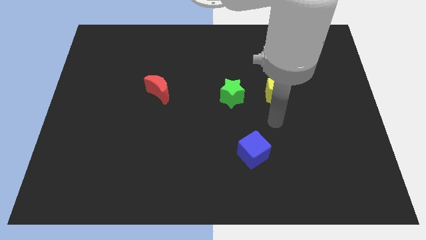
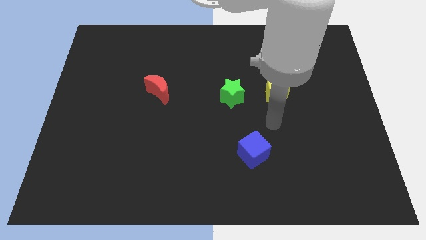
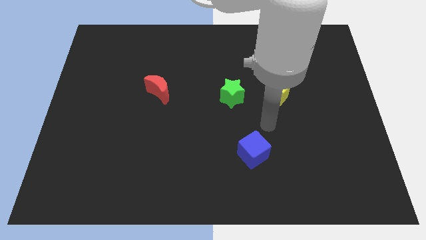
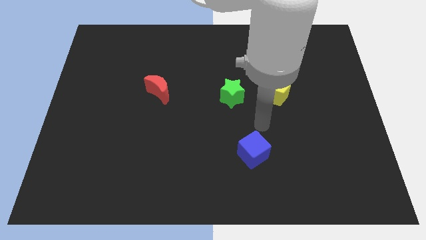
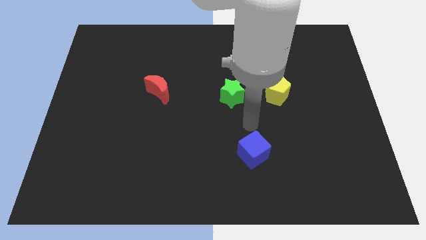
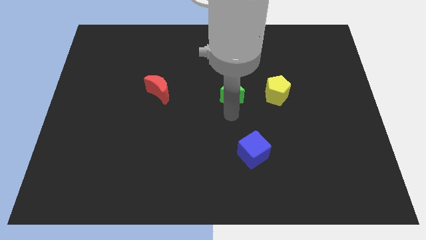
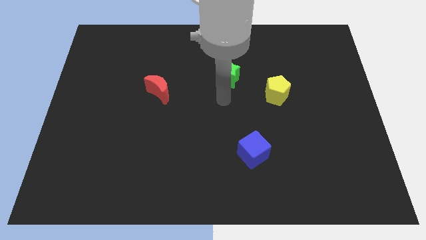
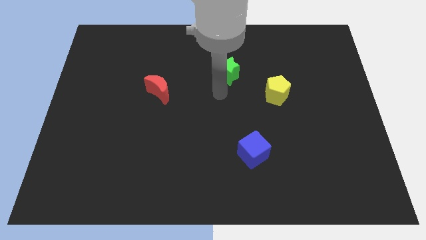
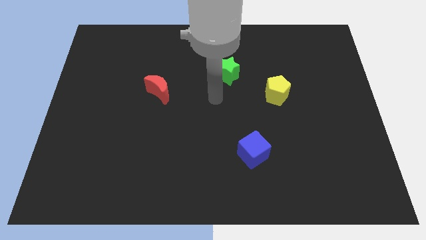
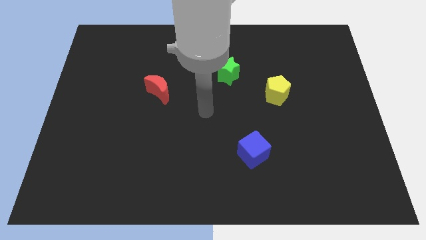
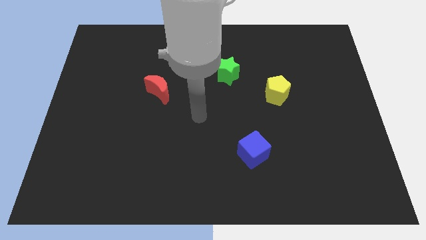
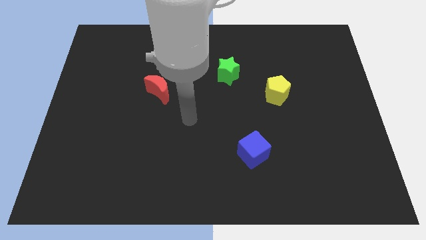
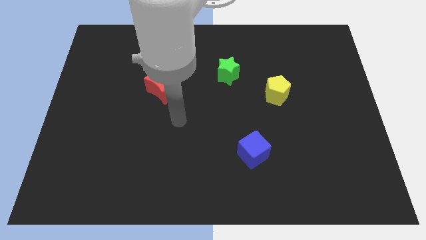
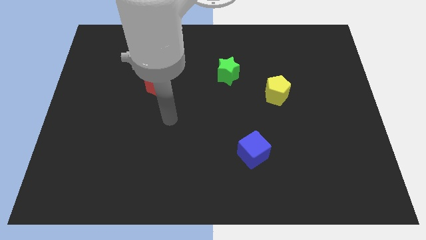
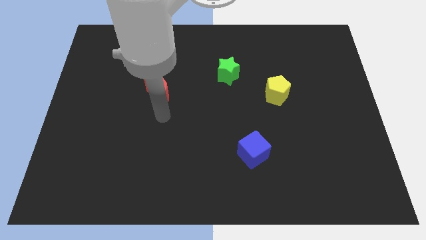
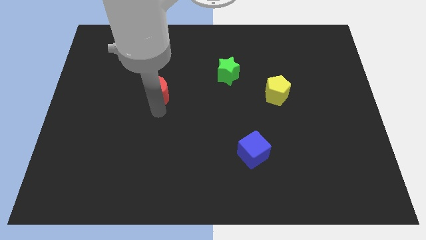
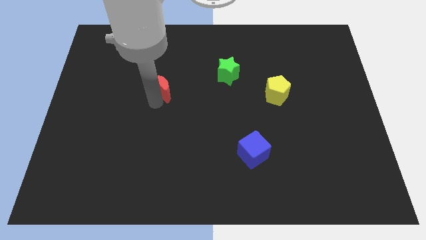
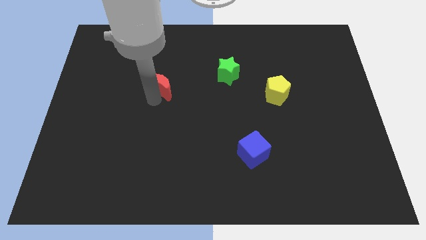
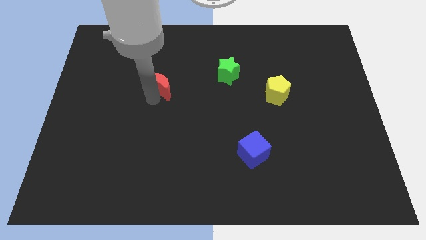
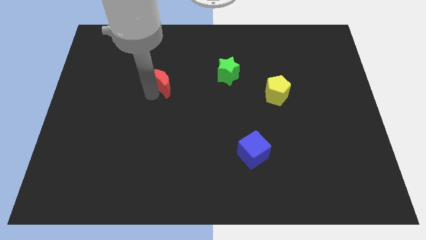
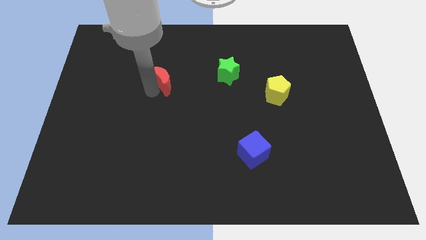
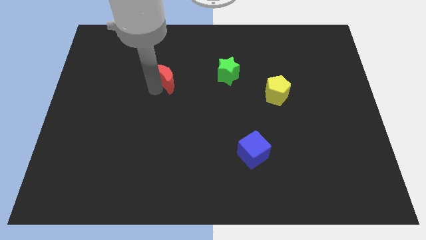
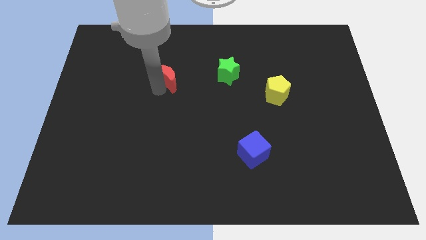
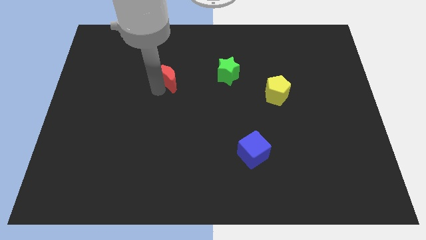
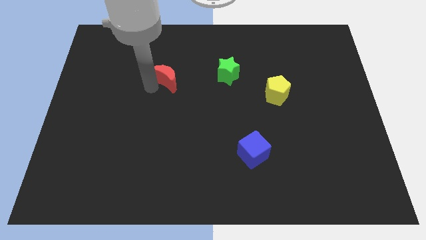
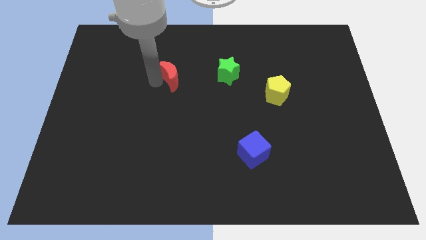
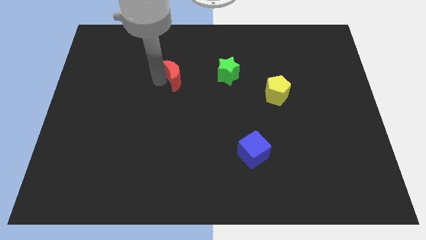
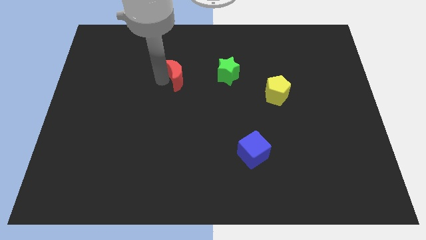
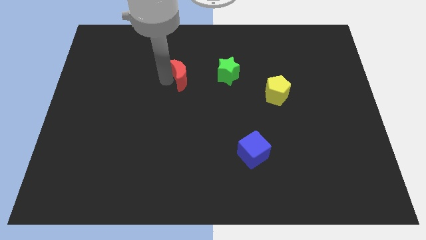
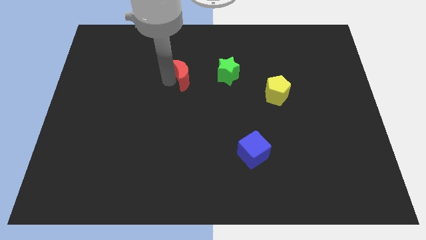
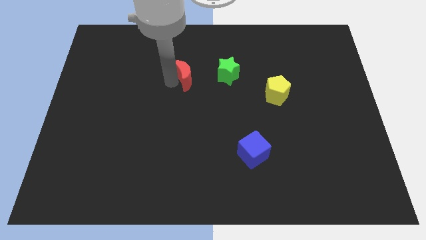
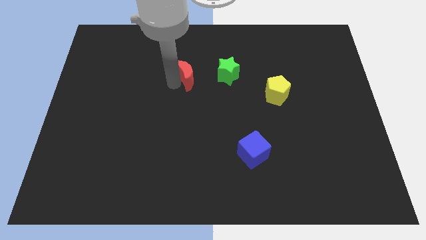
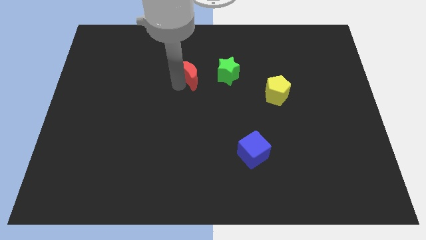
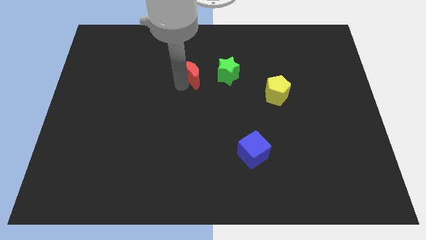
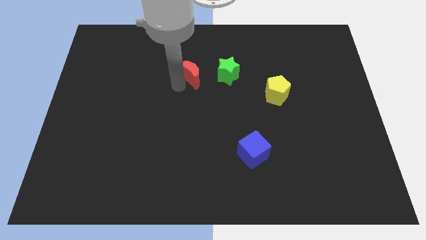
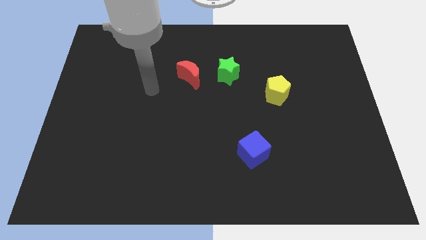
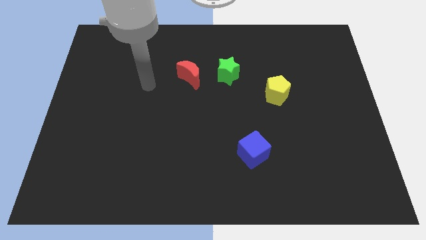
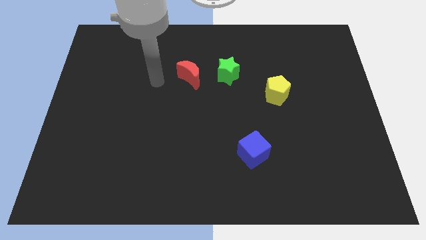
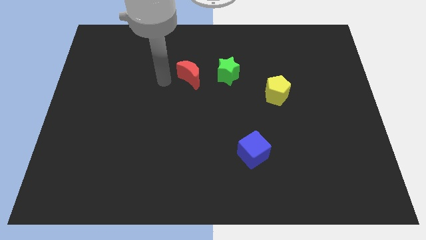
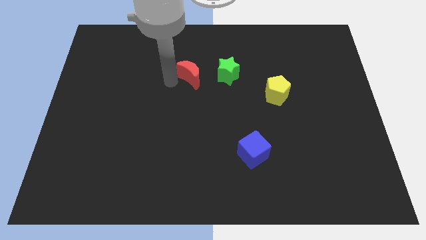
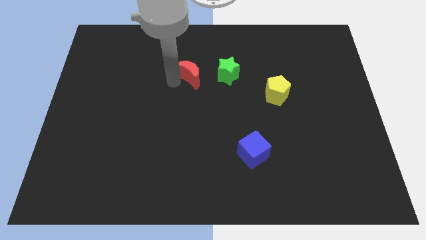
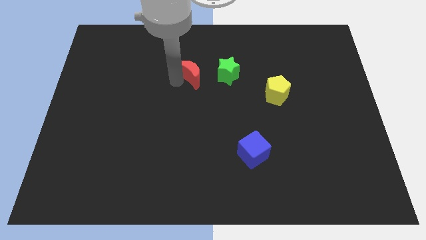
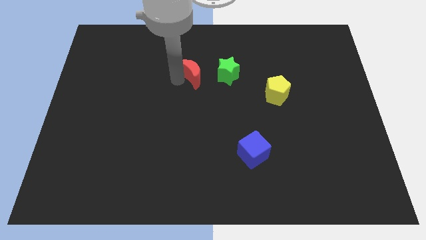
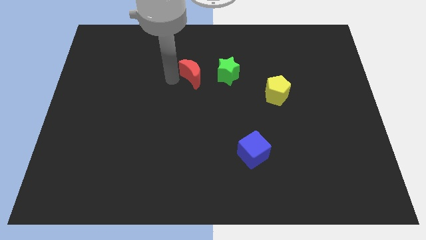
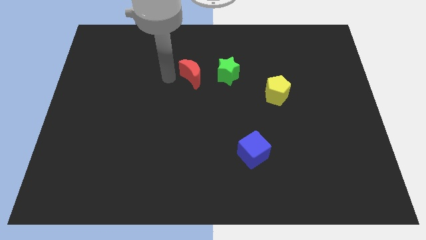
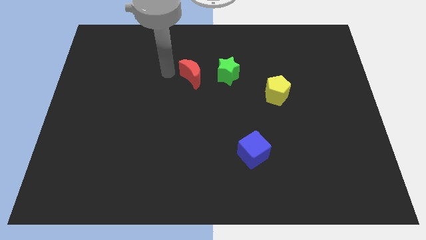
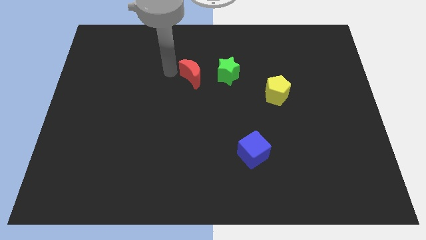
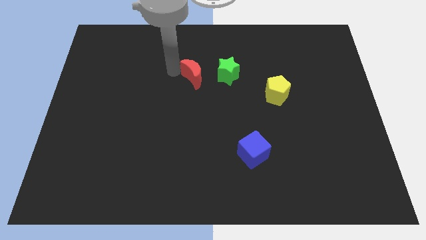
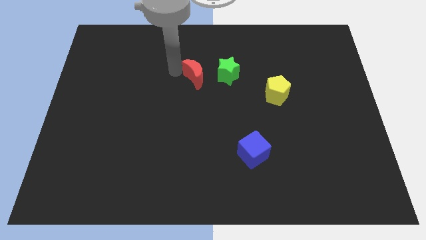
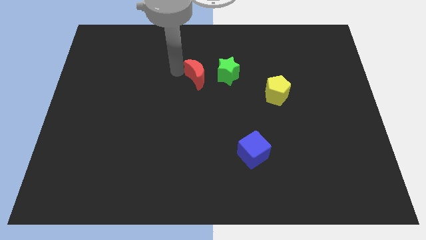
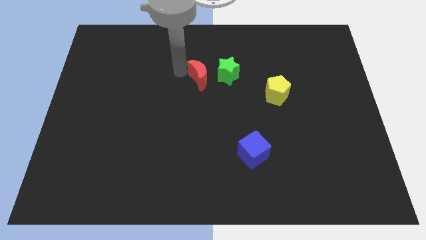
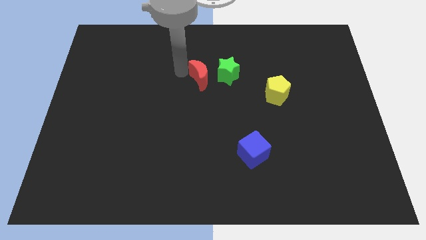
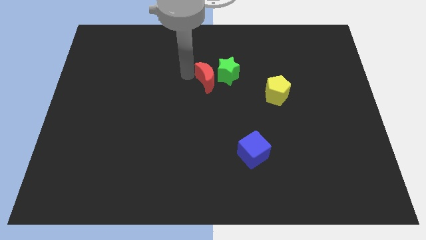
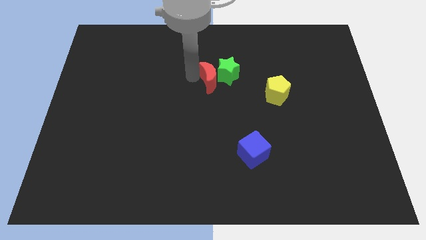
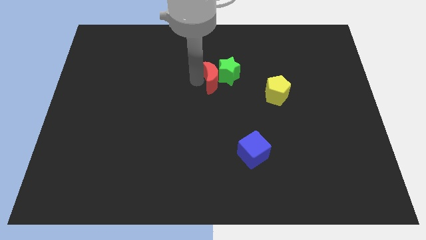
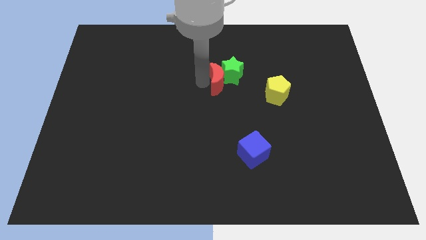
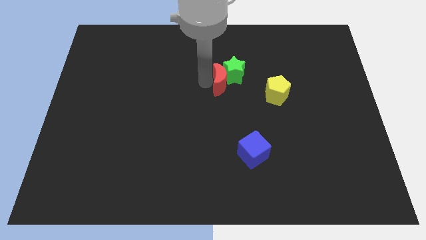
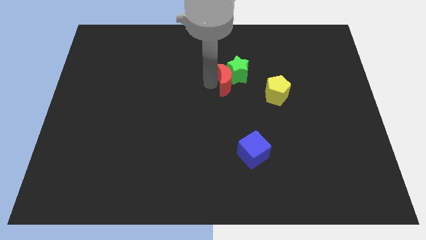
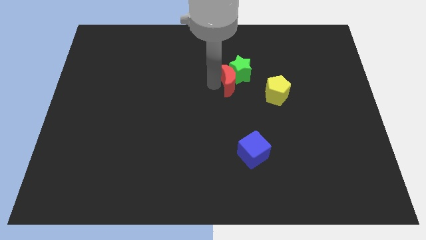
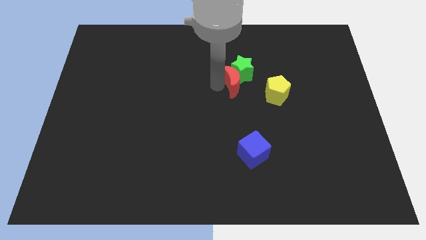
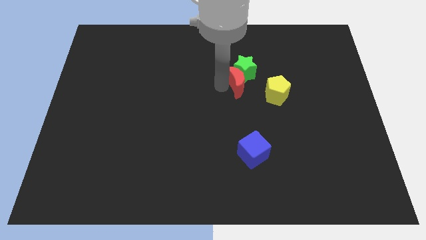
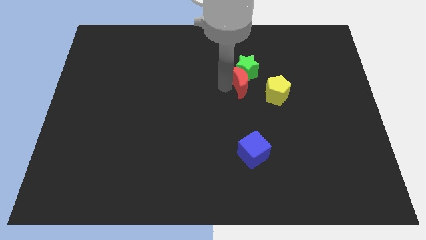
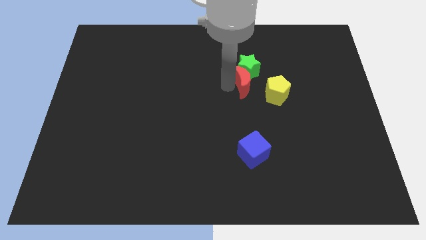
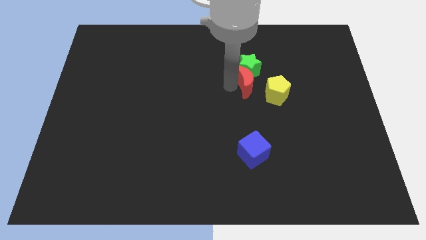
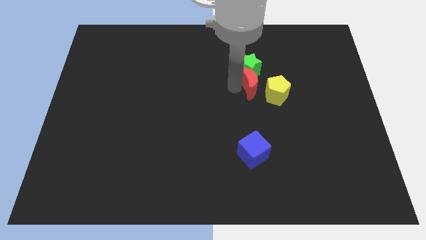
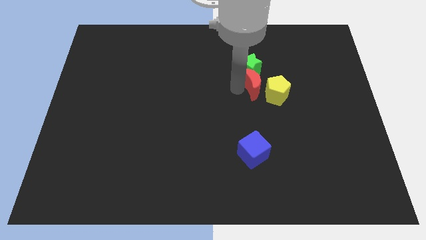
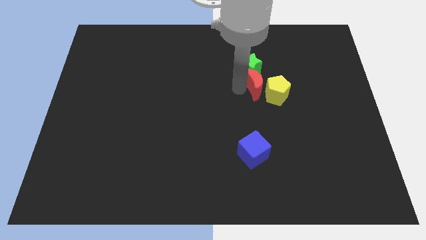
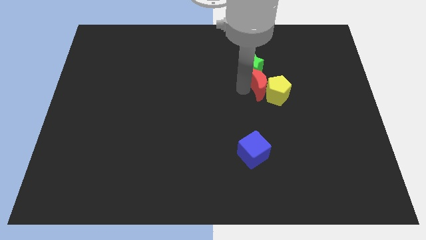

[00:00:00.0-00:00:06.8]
put the red block towards the pentagon

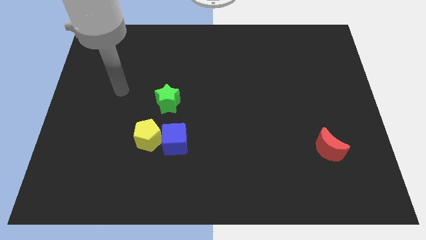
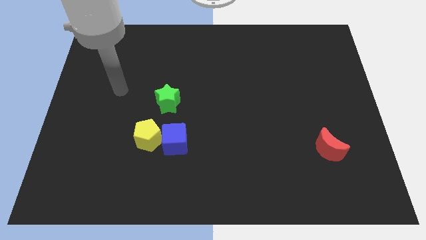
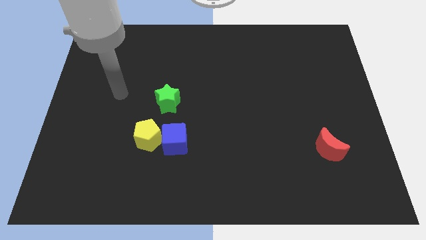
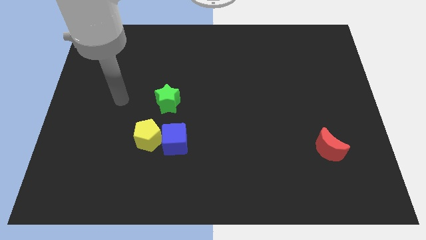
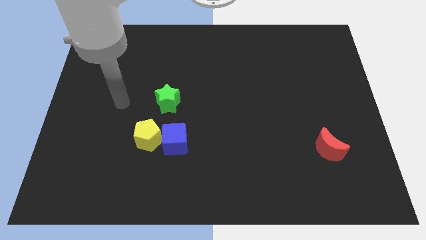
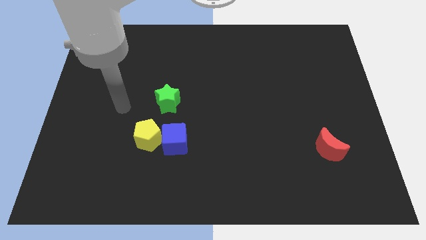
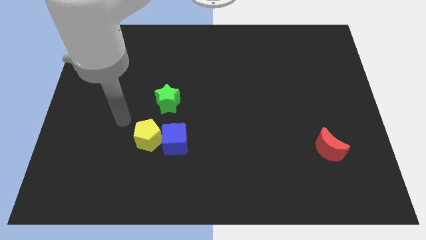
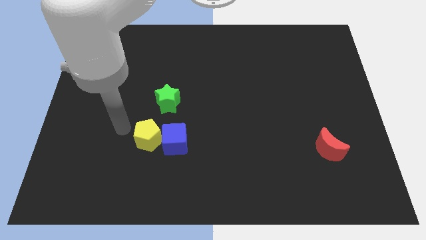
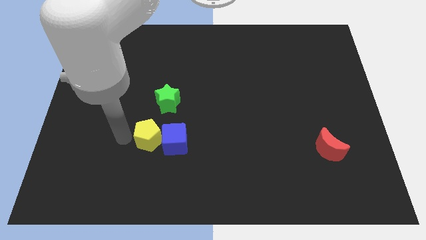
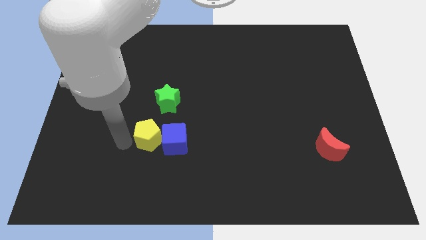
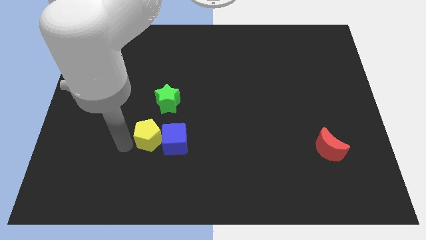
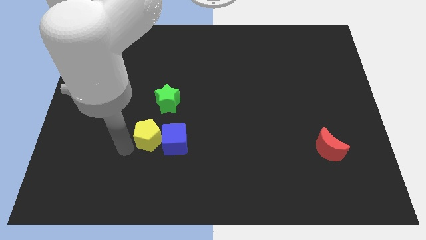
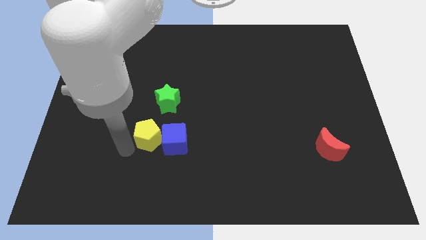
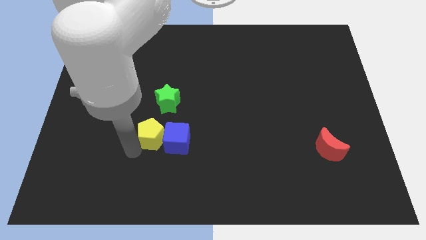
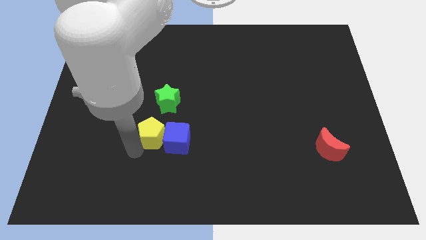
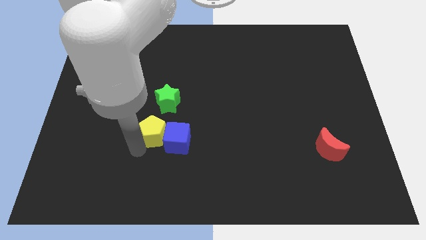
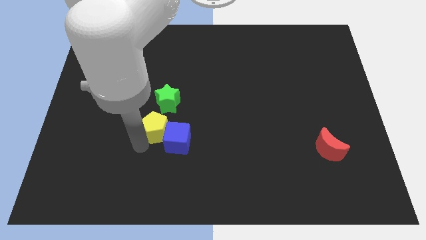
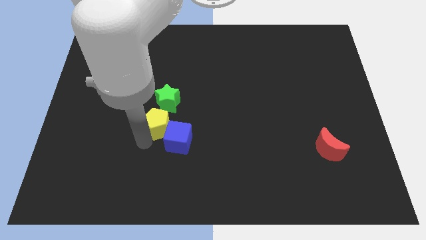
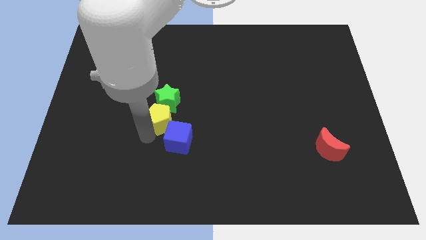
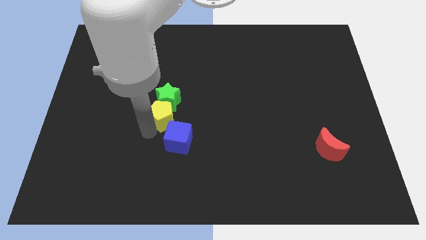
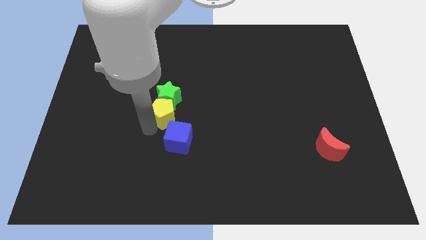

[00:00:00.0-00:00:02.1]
put the yellow block next to the star

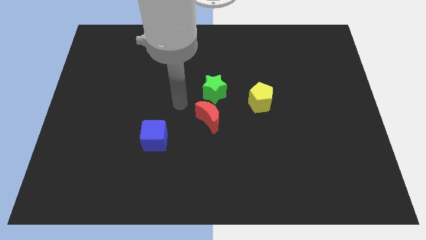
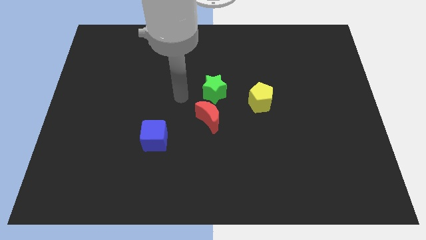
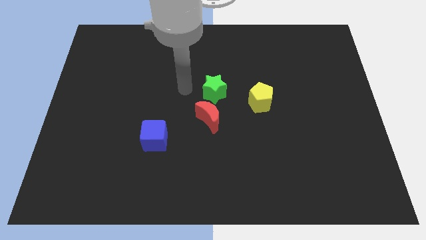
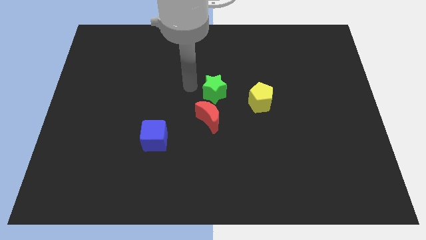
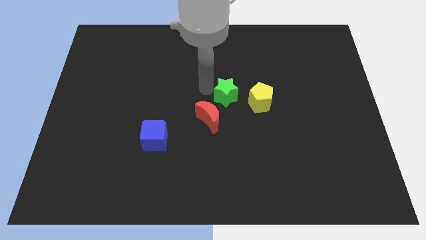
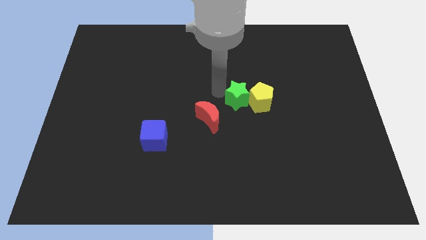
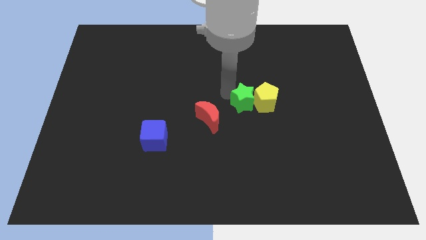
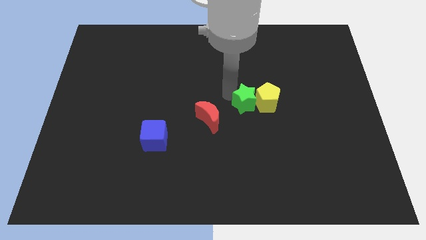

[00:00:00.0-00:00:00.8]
push the green star to the yellow pentagon
